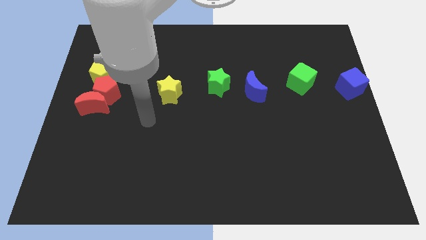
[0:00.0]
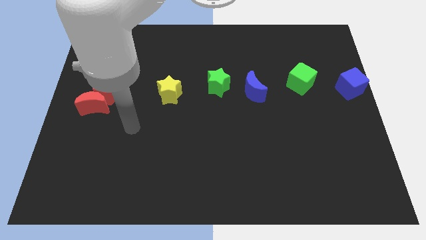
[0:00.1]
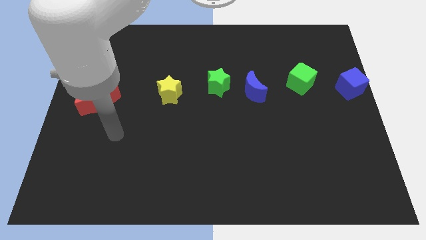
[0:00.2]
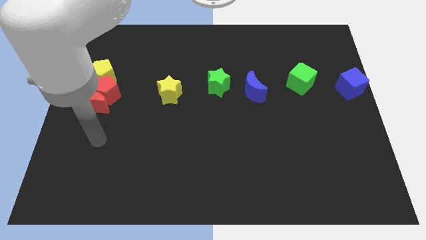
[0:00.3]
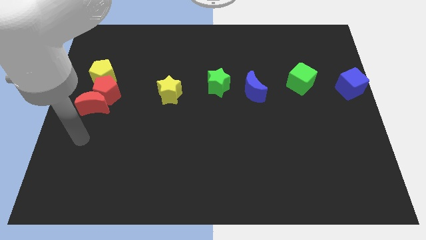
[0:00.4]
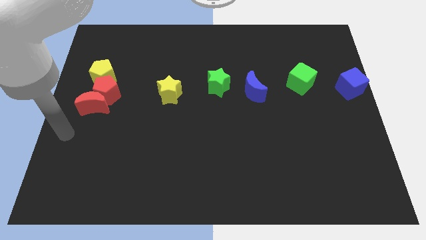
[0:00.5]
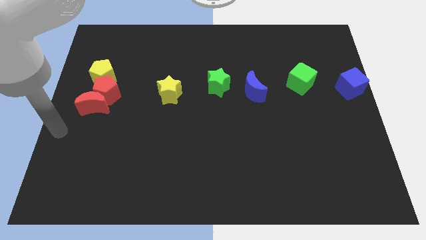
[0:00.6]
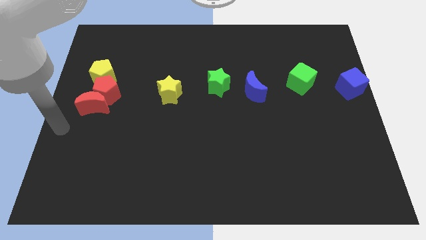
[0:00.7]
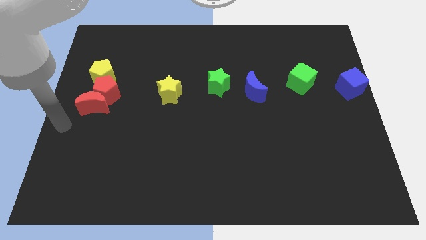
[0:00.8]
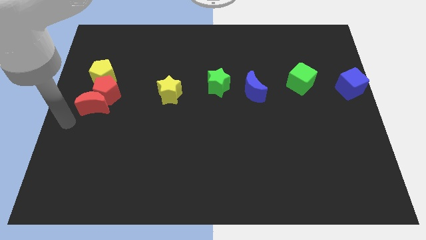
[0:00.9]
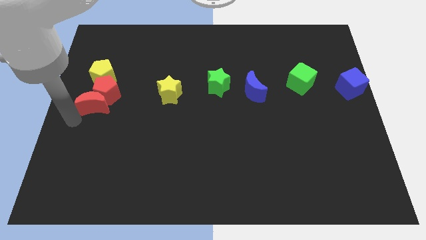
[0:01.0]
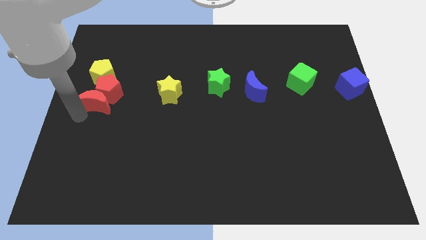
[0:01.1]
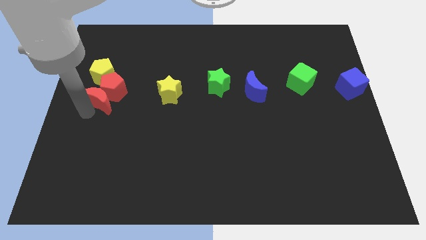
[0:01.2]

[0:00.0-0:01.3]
push the red crescent into the red pentagon

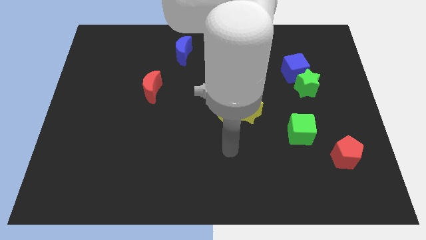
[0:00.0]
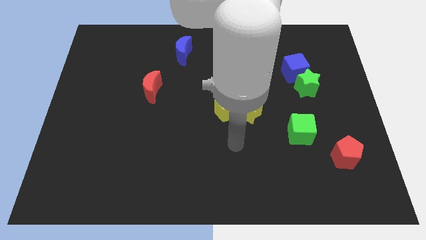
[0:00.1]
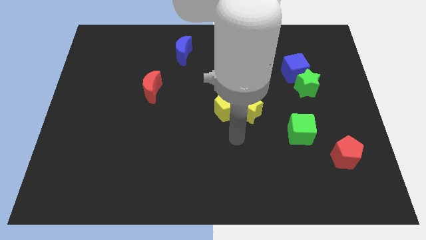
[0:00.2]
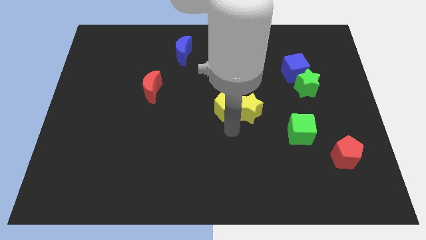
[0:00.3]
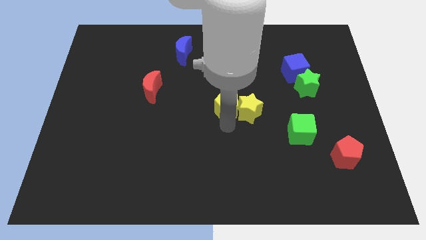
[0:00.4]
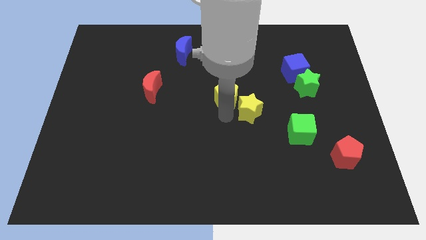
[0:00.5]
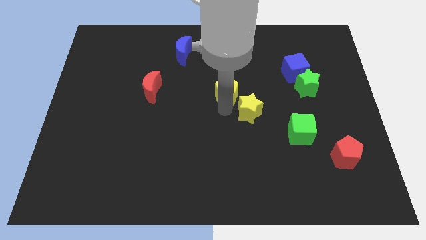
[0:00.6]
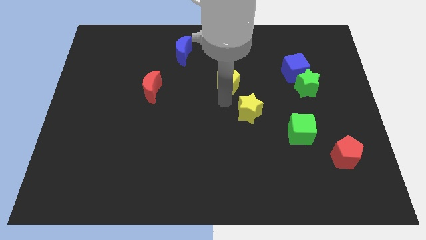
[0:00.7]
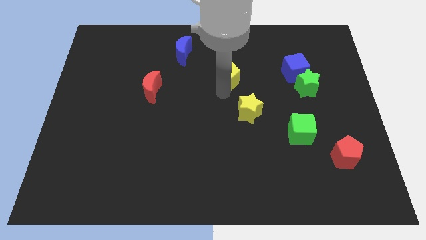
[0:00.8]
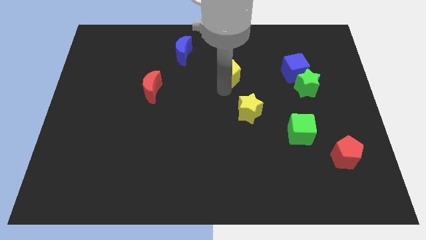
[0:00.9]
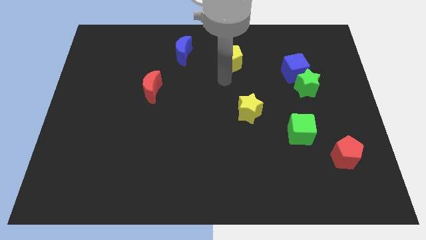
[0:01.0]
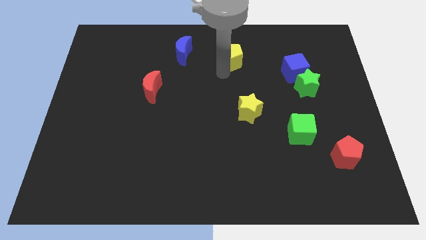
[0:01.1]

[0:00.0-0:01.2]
separate yellow pentagon from yellow star

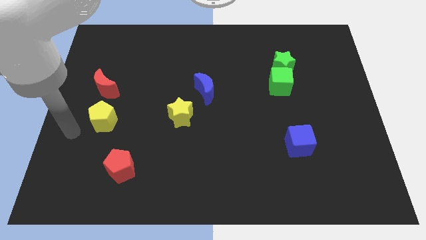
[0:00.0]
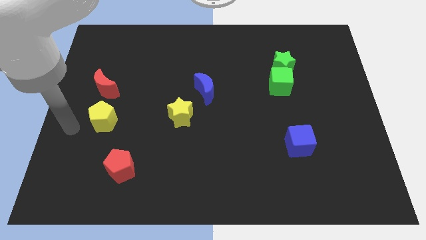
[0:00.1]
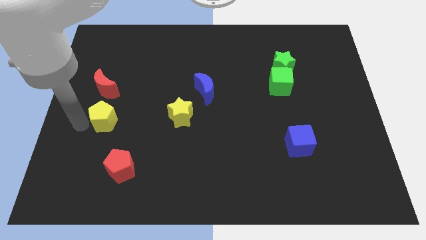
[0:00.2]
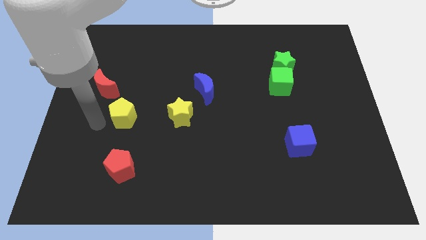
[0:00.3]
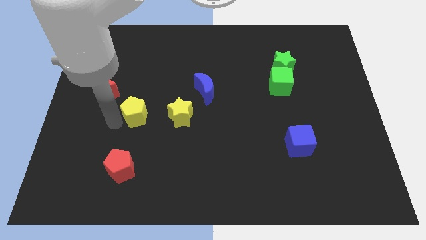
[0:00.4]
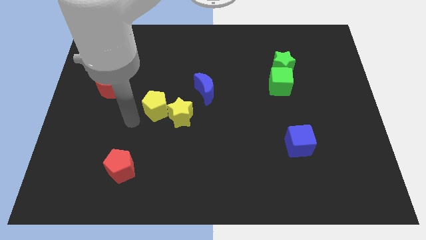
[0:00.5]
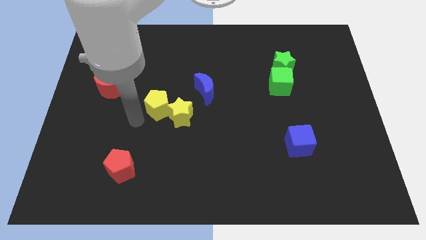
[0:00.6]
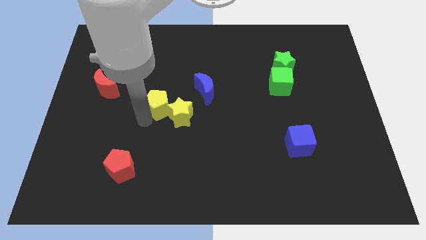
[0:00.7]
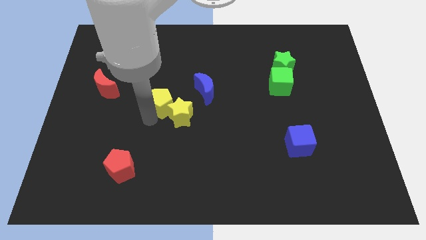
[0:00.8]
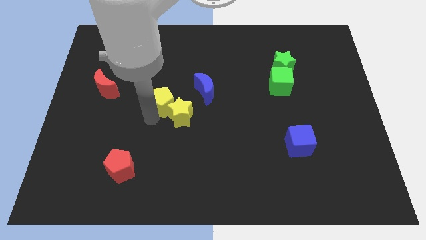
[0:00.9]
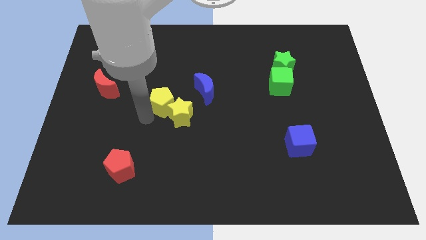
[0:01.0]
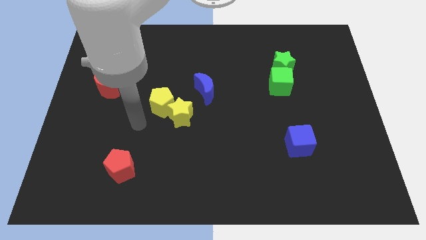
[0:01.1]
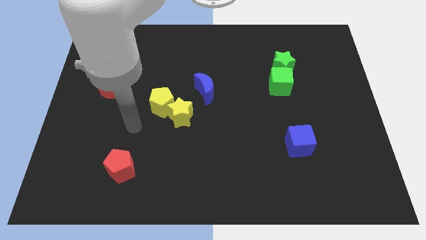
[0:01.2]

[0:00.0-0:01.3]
push the yellow pentagon close to the top right side of the yellow star

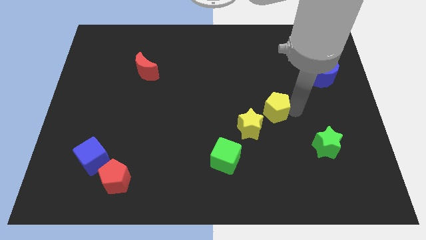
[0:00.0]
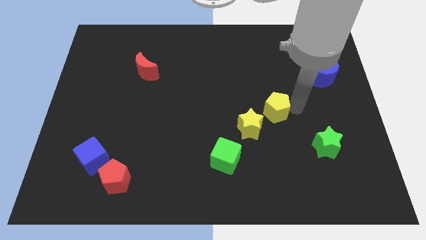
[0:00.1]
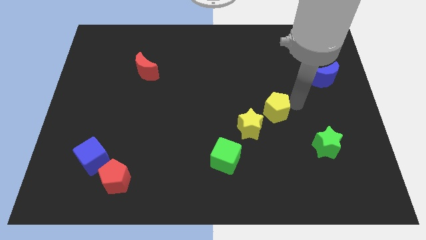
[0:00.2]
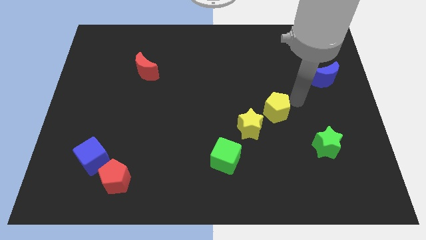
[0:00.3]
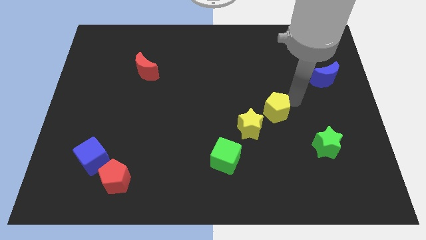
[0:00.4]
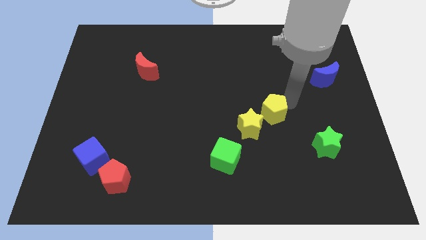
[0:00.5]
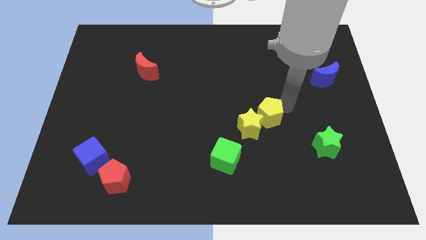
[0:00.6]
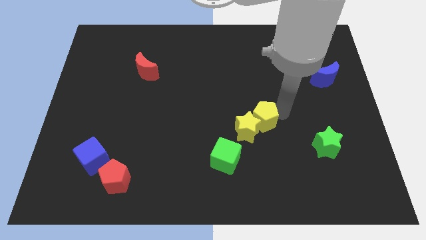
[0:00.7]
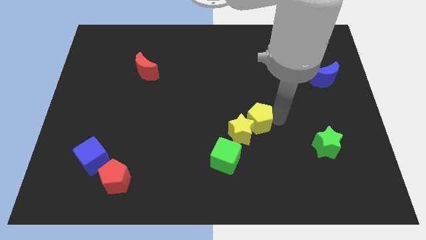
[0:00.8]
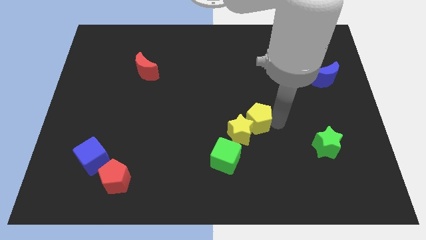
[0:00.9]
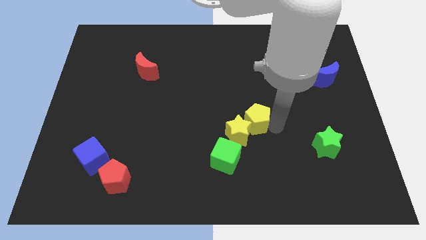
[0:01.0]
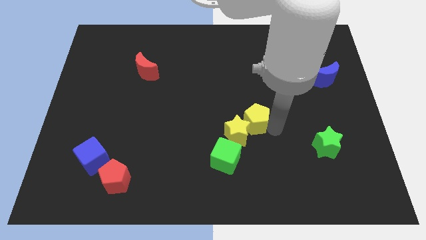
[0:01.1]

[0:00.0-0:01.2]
place the yellow pentagon above the yellow star

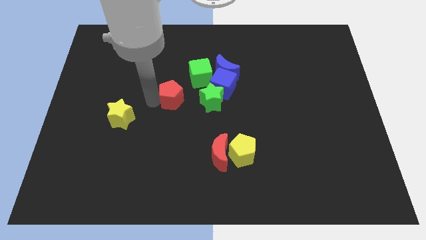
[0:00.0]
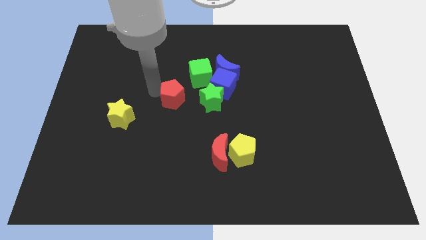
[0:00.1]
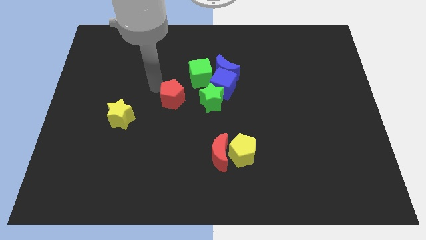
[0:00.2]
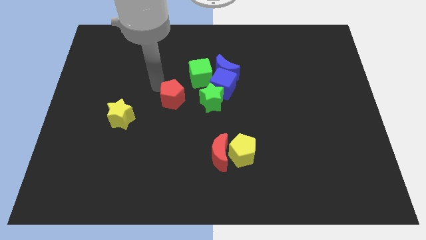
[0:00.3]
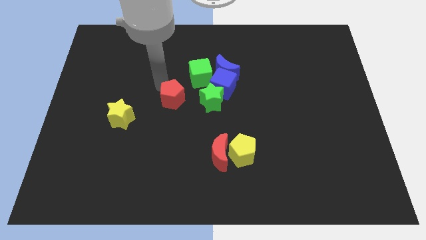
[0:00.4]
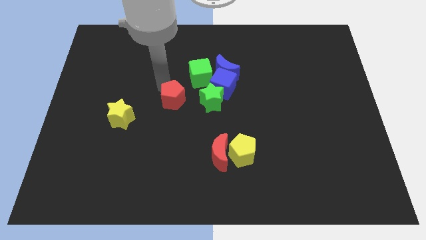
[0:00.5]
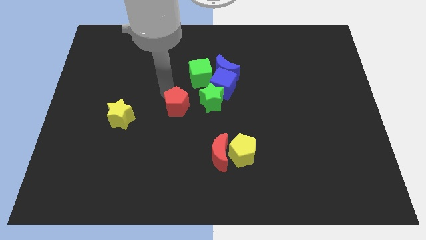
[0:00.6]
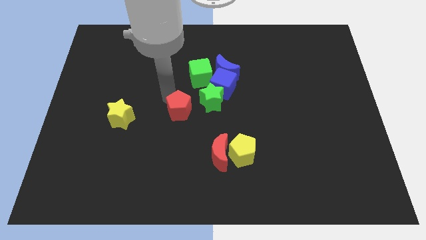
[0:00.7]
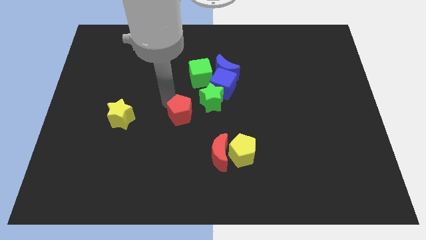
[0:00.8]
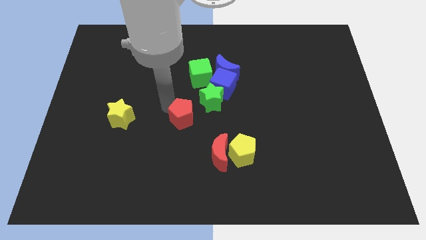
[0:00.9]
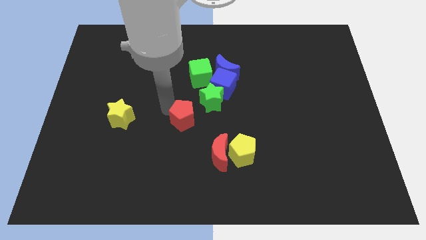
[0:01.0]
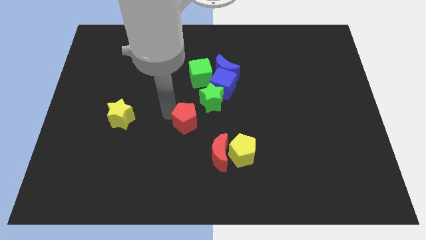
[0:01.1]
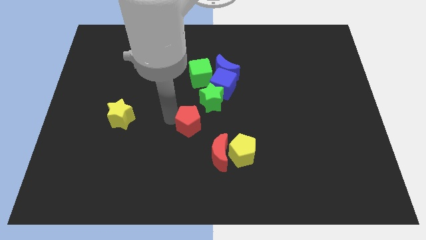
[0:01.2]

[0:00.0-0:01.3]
move the red pentagon towards the red moon

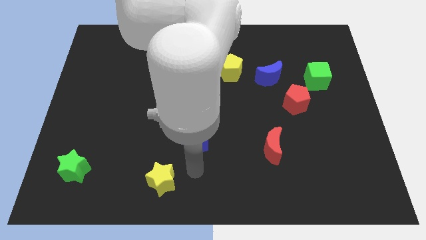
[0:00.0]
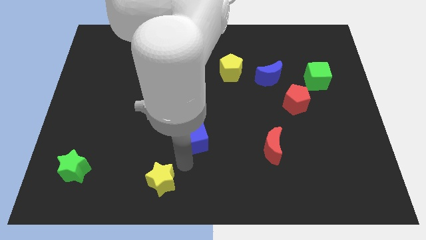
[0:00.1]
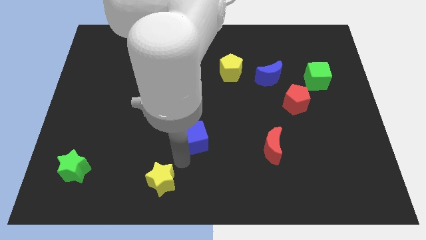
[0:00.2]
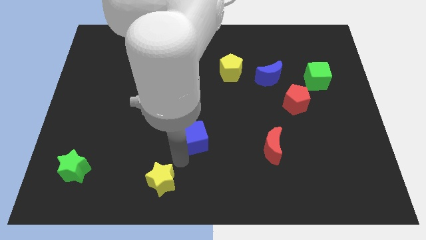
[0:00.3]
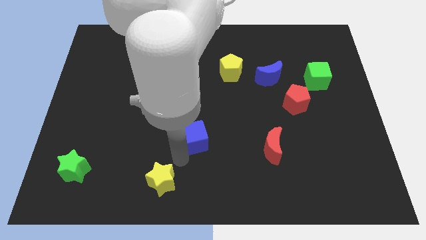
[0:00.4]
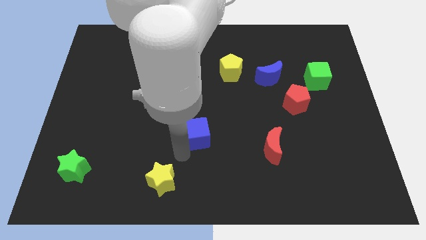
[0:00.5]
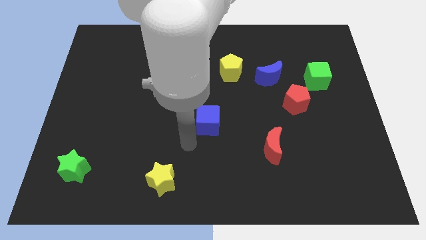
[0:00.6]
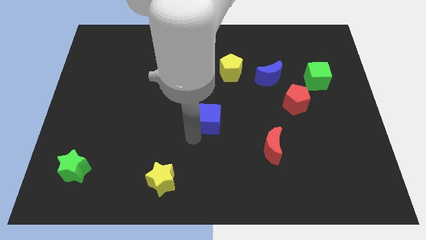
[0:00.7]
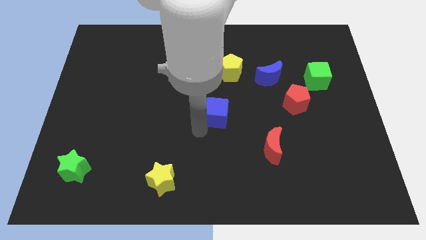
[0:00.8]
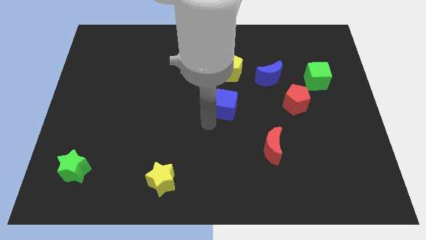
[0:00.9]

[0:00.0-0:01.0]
push the blue cube towards the center of the board

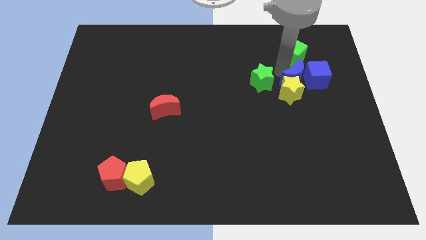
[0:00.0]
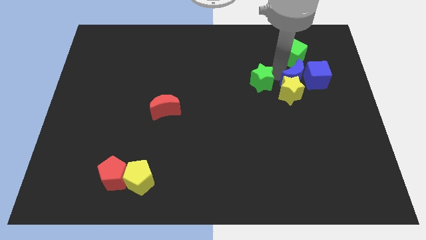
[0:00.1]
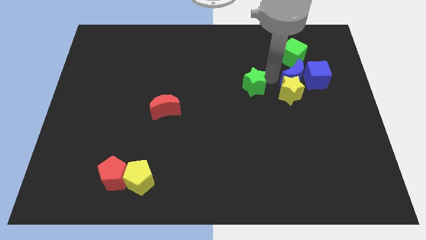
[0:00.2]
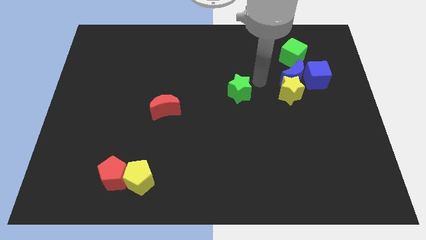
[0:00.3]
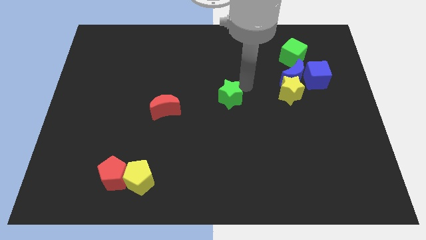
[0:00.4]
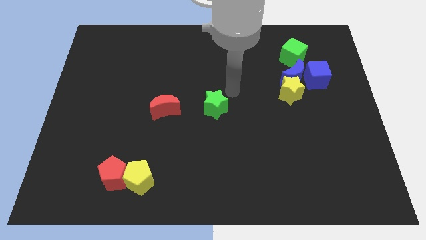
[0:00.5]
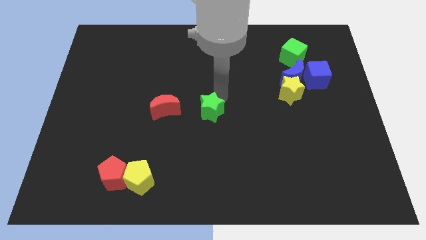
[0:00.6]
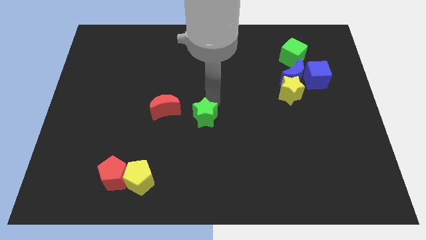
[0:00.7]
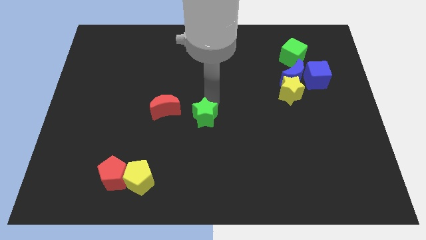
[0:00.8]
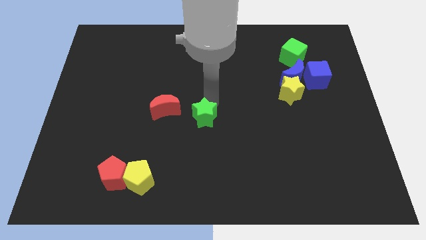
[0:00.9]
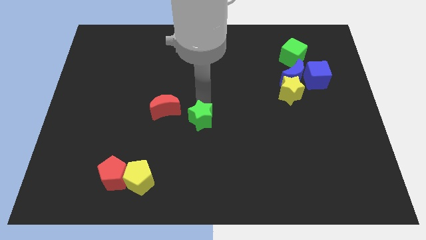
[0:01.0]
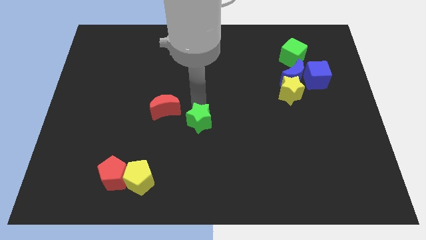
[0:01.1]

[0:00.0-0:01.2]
place green star beside red moon

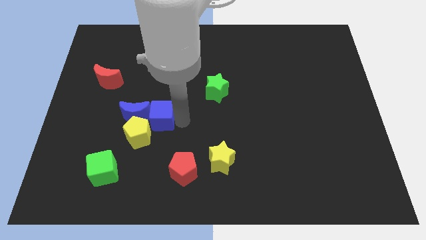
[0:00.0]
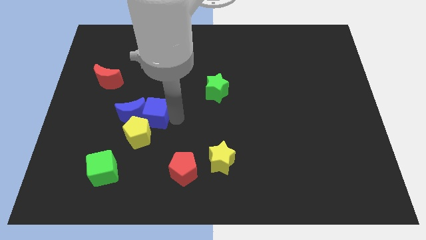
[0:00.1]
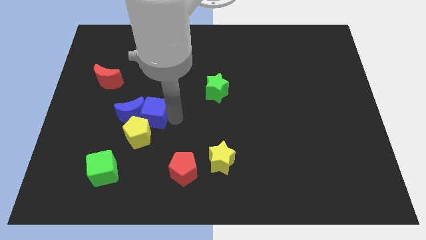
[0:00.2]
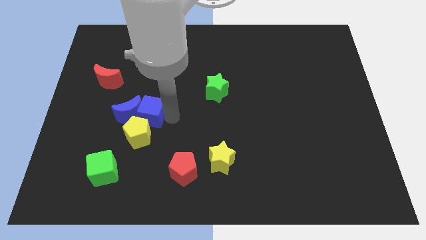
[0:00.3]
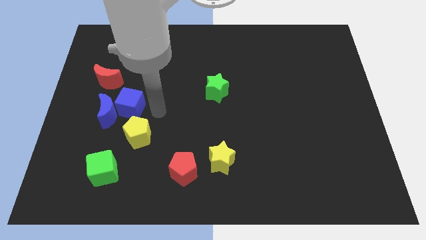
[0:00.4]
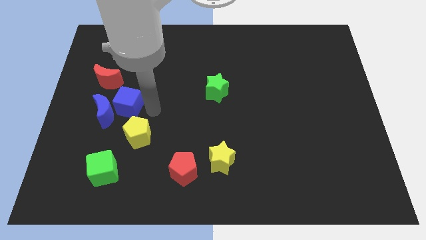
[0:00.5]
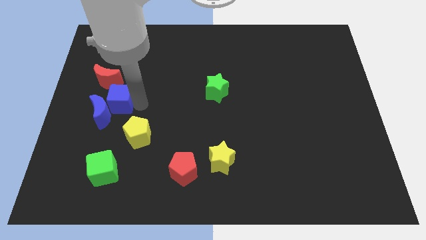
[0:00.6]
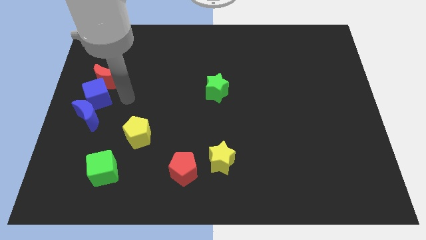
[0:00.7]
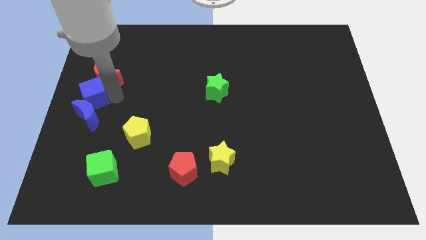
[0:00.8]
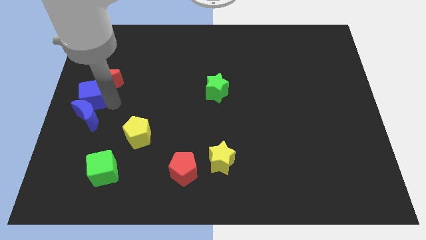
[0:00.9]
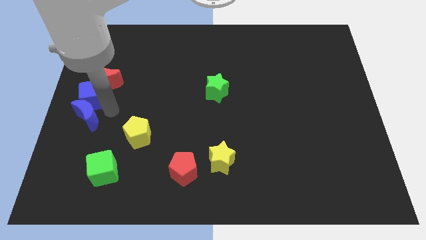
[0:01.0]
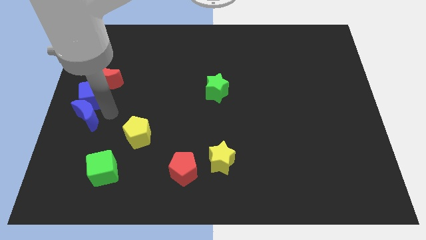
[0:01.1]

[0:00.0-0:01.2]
push the blue cube below the red crescent
